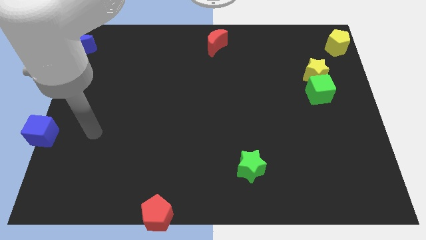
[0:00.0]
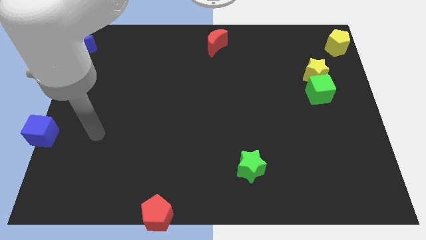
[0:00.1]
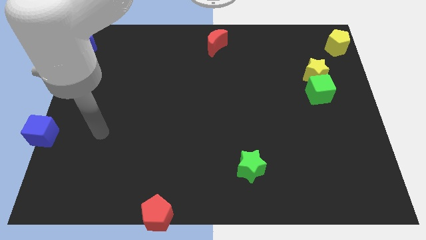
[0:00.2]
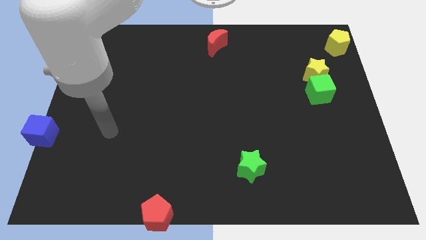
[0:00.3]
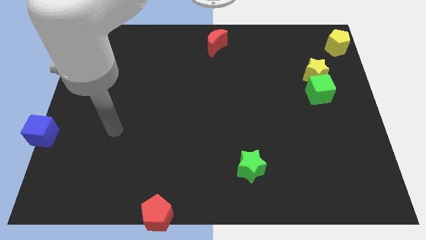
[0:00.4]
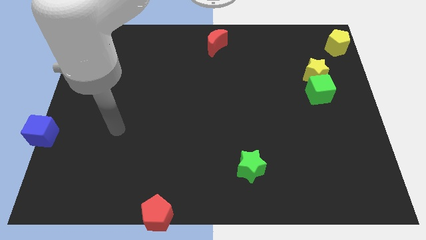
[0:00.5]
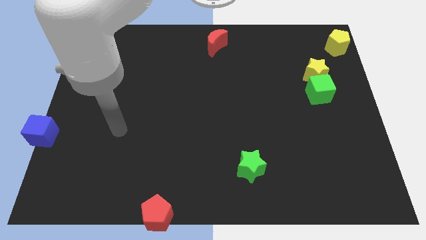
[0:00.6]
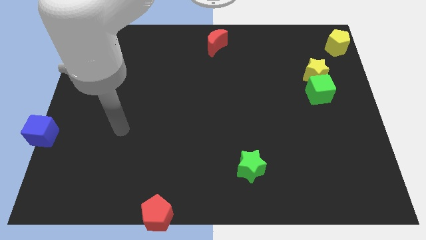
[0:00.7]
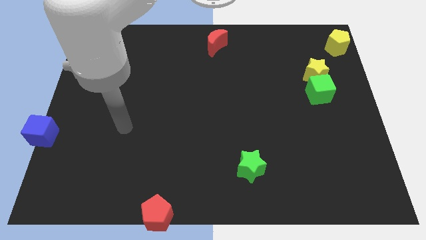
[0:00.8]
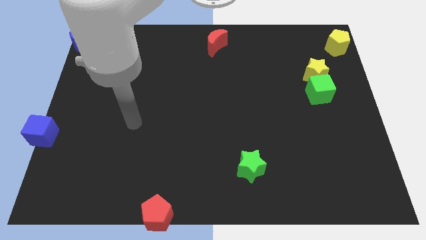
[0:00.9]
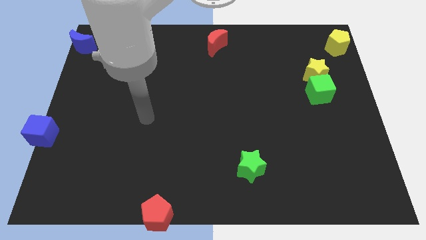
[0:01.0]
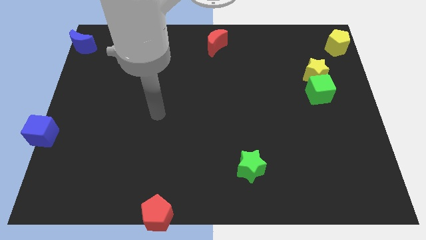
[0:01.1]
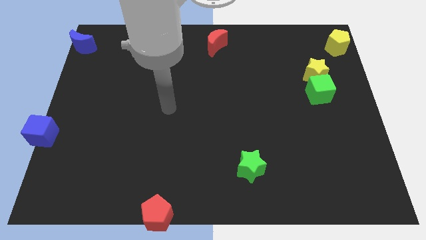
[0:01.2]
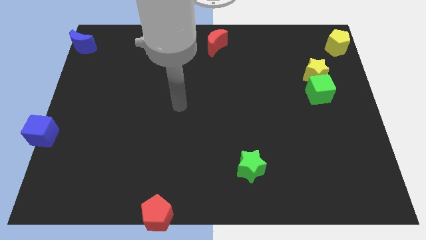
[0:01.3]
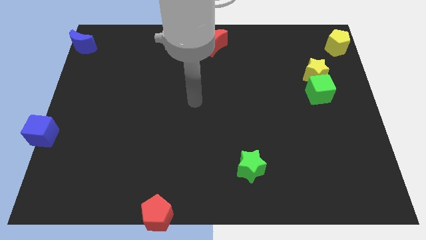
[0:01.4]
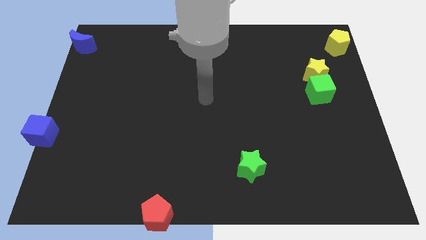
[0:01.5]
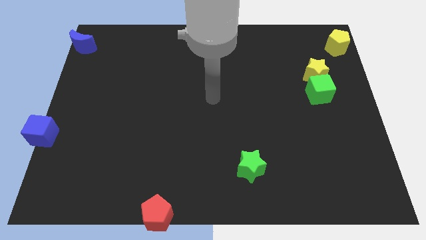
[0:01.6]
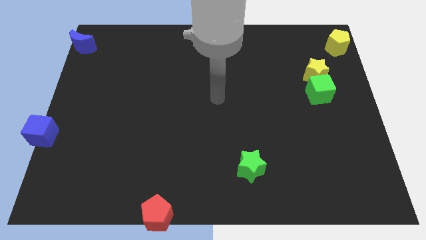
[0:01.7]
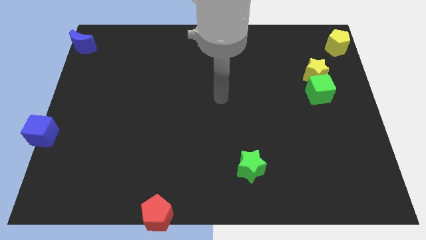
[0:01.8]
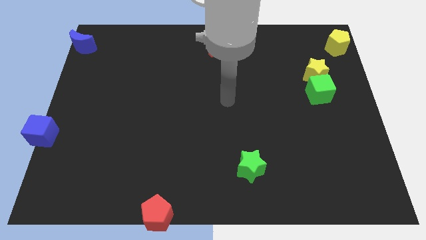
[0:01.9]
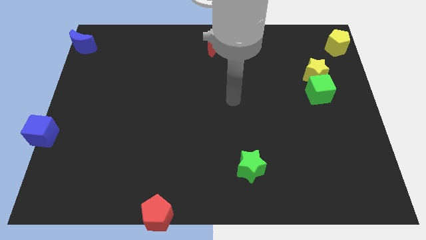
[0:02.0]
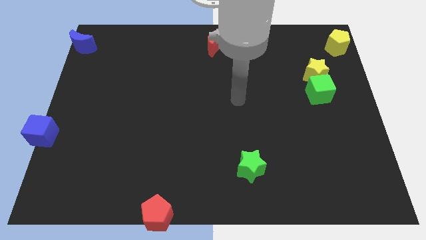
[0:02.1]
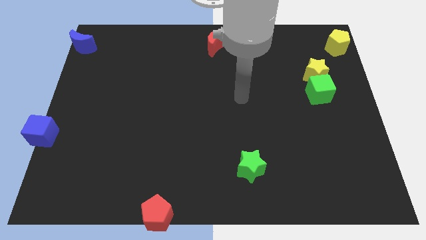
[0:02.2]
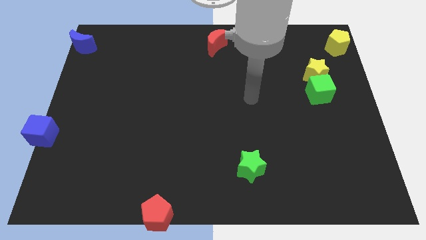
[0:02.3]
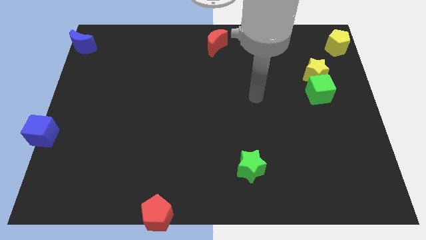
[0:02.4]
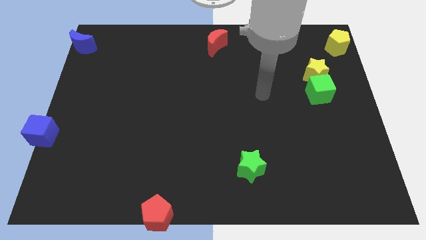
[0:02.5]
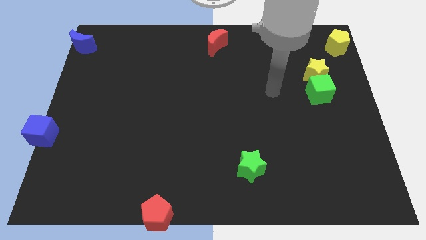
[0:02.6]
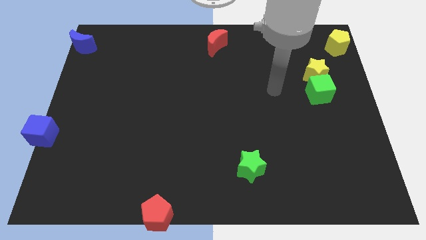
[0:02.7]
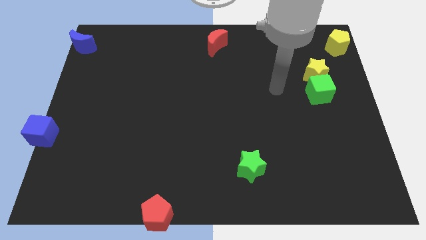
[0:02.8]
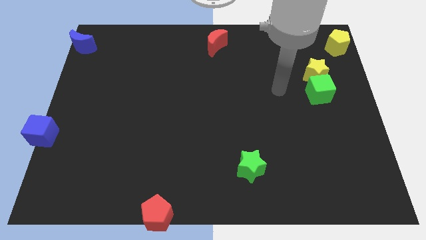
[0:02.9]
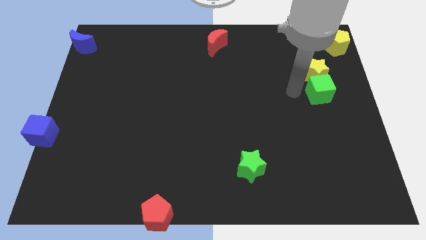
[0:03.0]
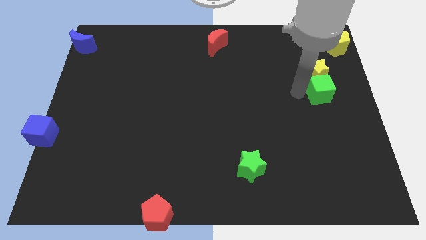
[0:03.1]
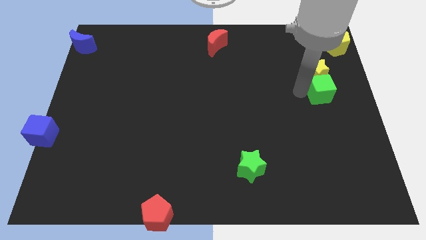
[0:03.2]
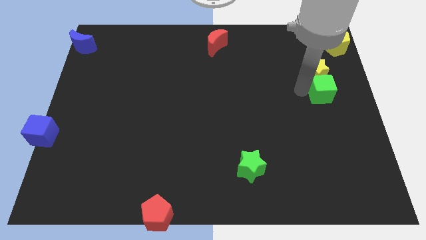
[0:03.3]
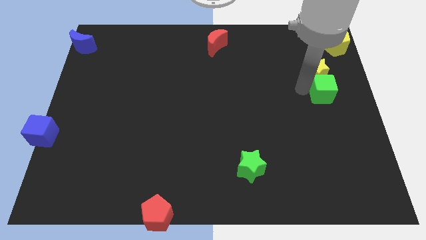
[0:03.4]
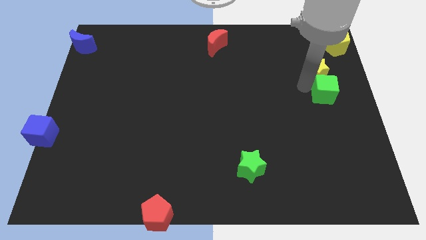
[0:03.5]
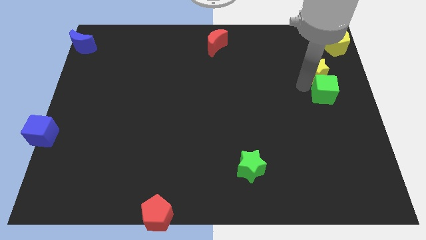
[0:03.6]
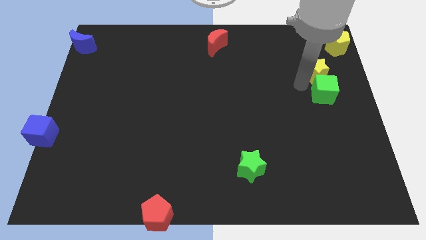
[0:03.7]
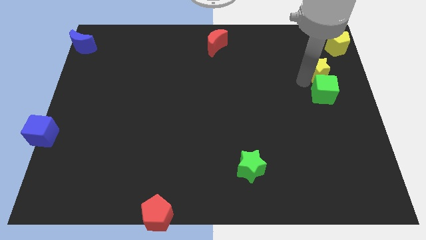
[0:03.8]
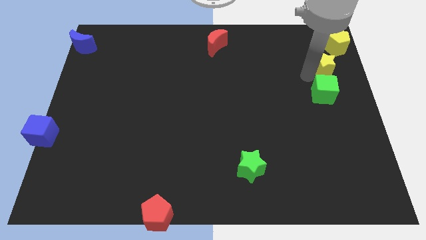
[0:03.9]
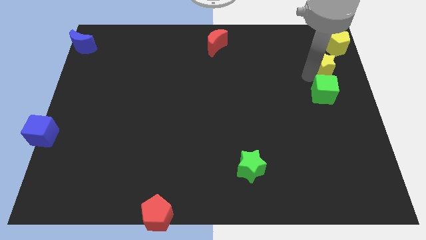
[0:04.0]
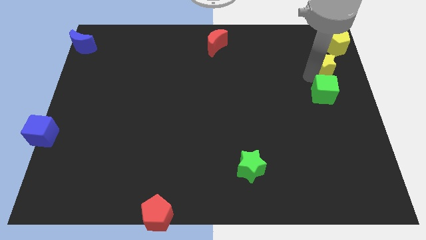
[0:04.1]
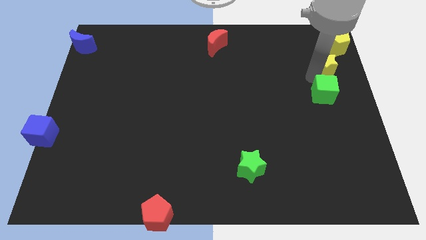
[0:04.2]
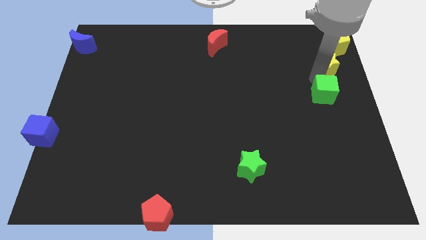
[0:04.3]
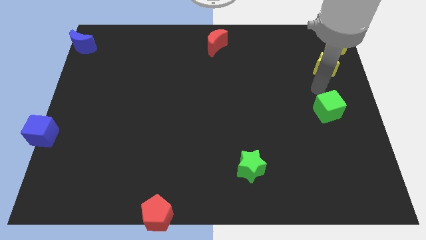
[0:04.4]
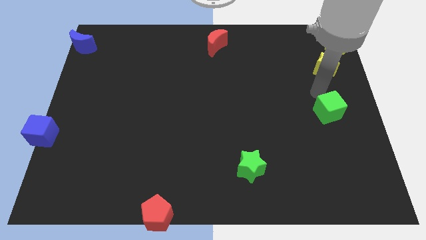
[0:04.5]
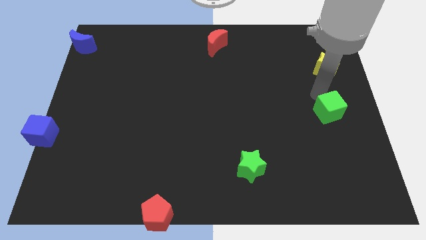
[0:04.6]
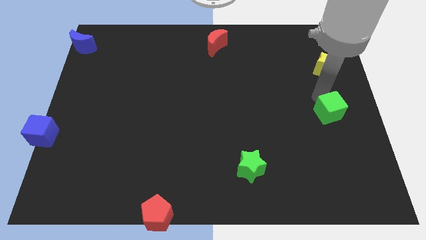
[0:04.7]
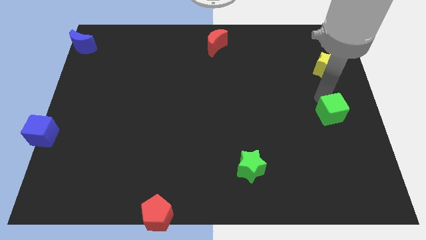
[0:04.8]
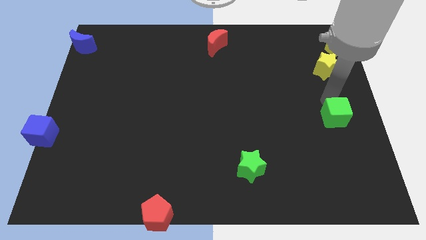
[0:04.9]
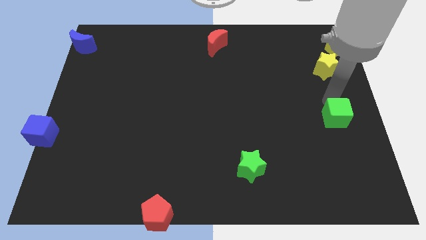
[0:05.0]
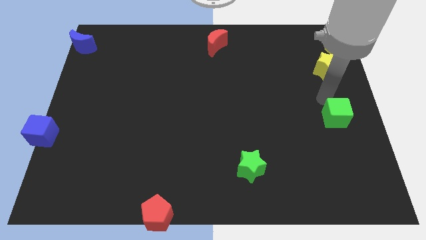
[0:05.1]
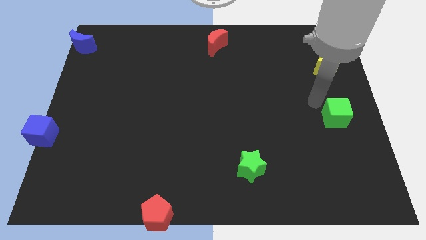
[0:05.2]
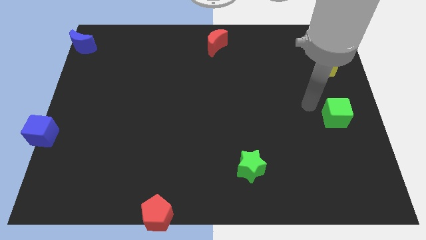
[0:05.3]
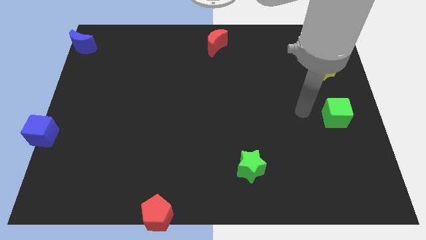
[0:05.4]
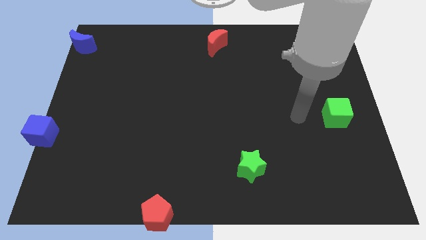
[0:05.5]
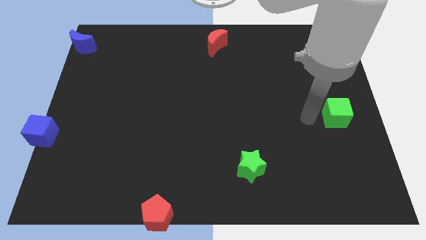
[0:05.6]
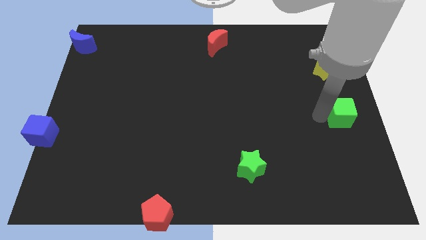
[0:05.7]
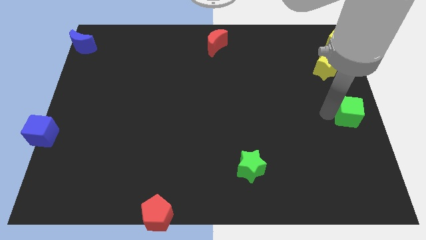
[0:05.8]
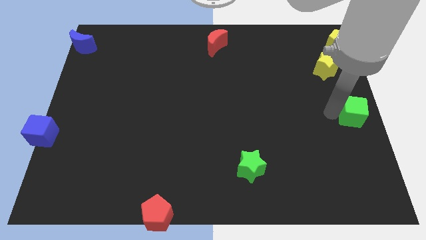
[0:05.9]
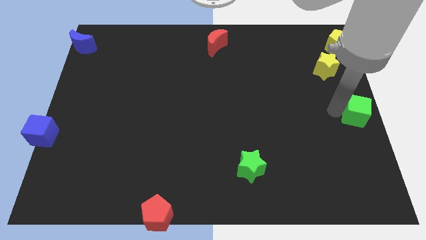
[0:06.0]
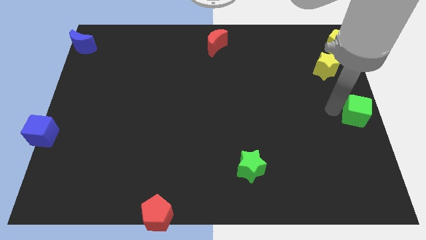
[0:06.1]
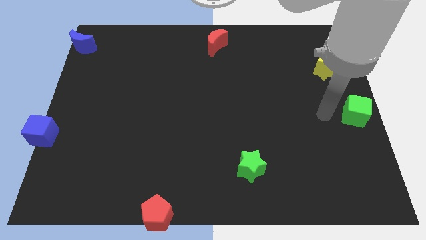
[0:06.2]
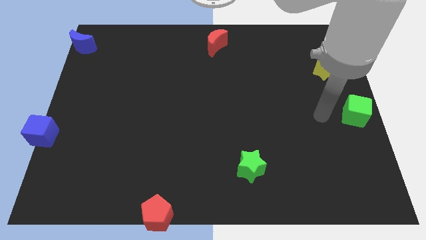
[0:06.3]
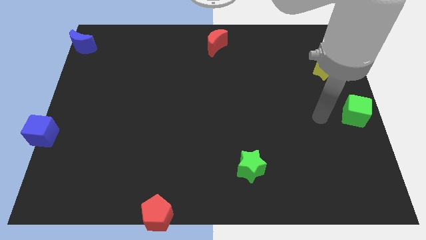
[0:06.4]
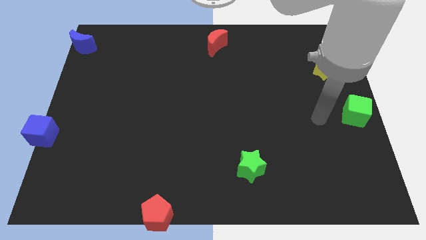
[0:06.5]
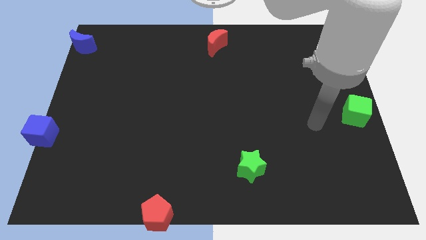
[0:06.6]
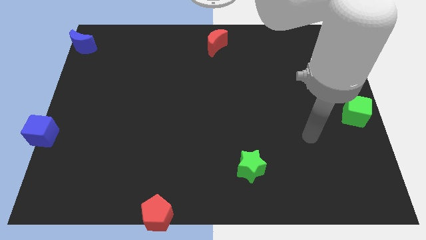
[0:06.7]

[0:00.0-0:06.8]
move the green cube to the center right of the board

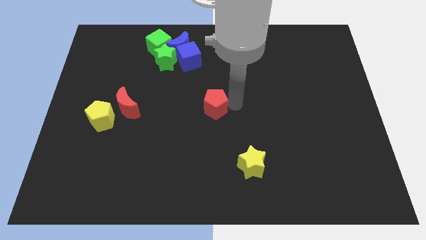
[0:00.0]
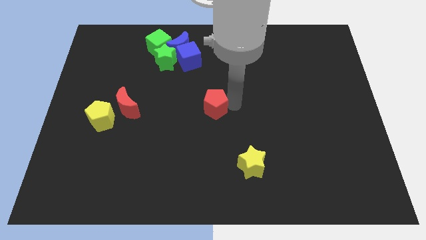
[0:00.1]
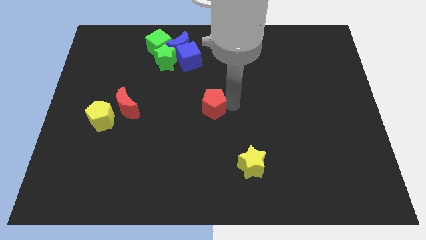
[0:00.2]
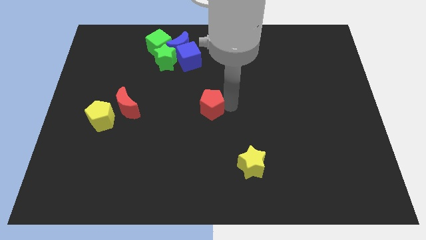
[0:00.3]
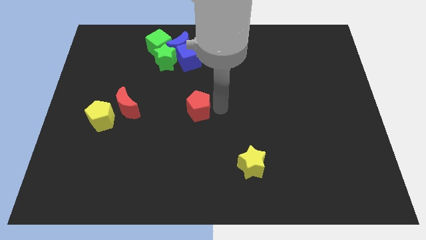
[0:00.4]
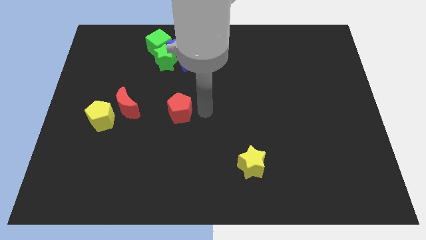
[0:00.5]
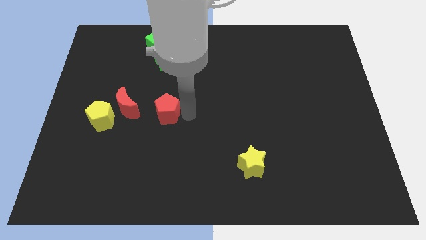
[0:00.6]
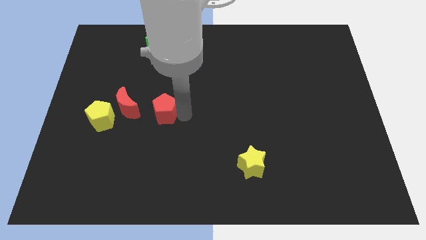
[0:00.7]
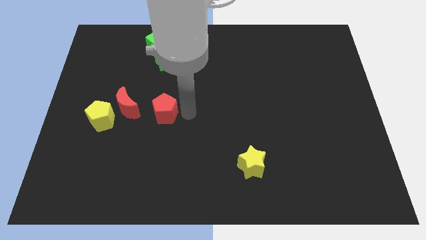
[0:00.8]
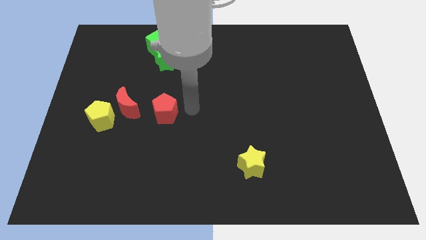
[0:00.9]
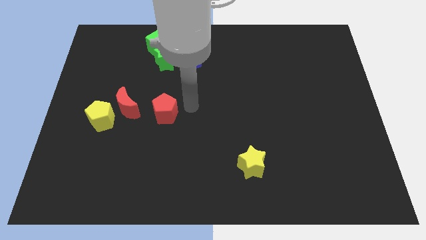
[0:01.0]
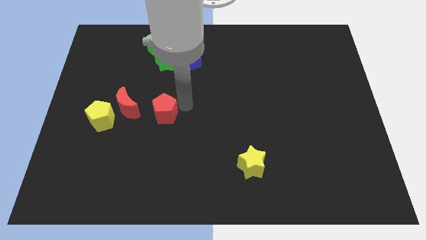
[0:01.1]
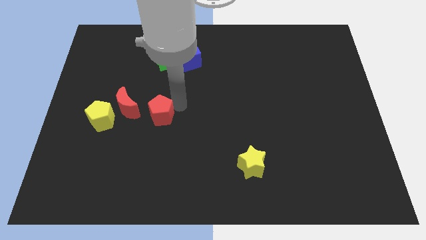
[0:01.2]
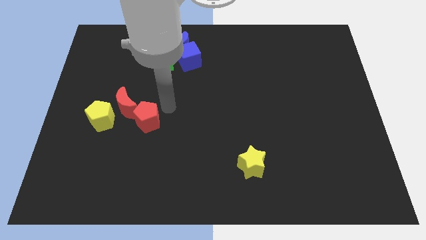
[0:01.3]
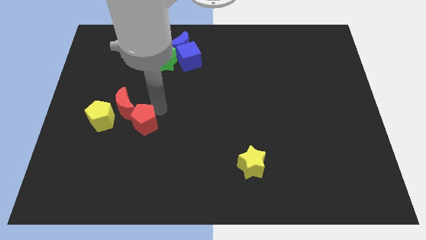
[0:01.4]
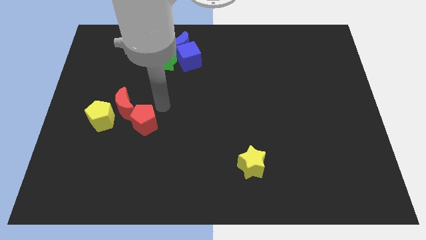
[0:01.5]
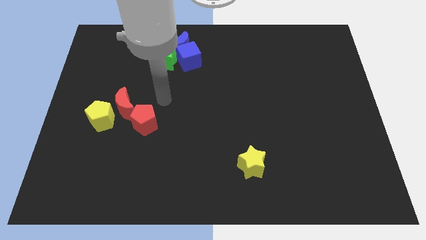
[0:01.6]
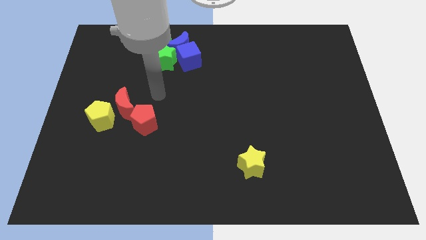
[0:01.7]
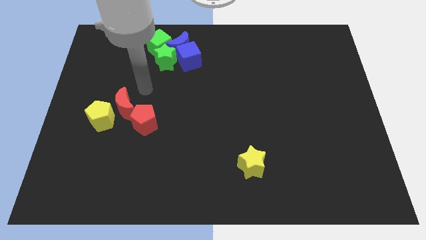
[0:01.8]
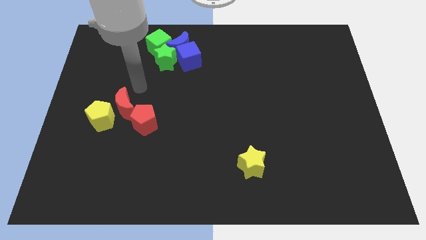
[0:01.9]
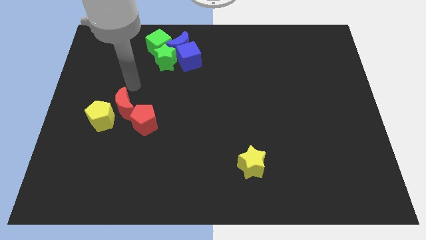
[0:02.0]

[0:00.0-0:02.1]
slide the red pentagon into the red crescent

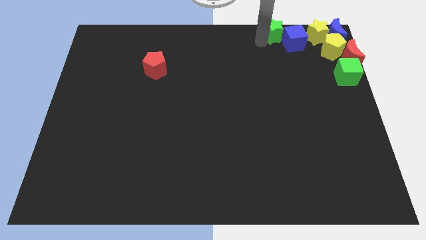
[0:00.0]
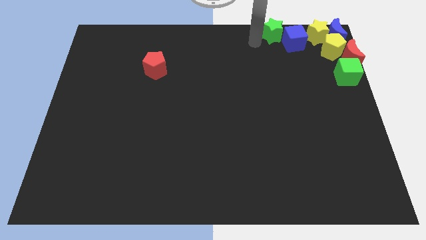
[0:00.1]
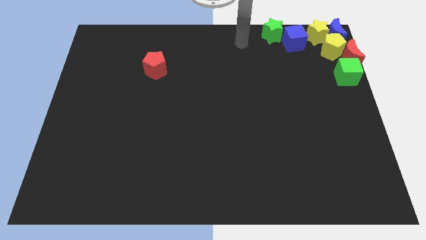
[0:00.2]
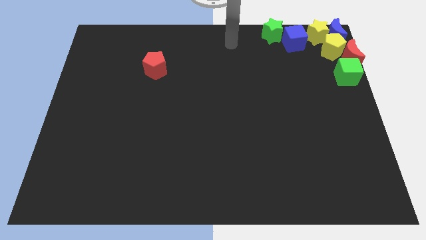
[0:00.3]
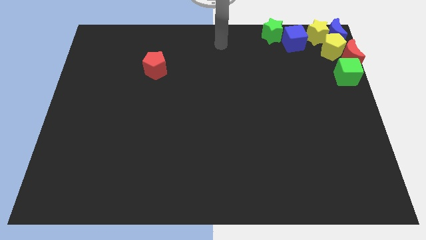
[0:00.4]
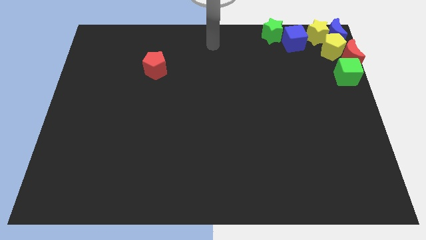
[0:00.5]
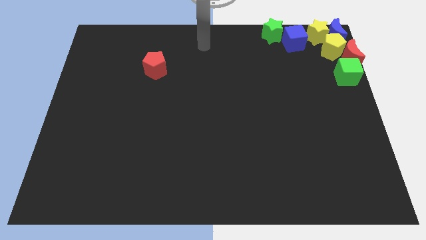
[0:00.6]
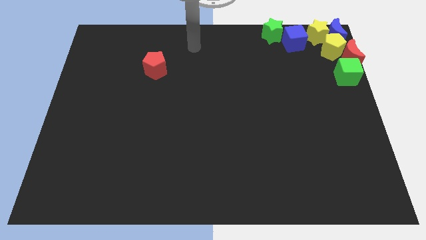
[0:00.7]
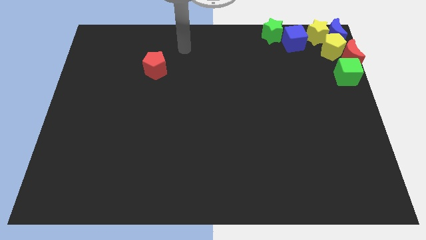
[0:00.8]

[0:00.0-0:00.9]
move the arm away from the green star
